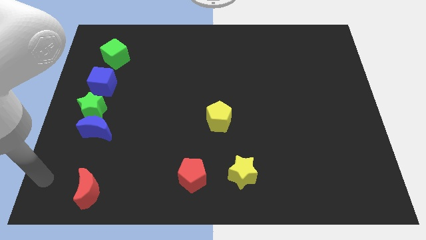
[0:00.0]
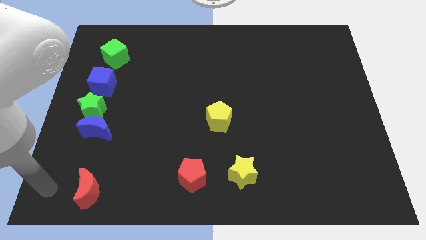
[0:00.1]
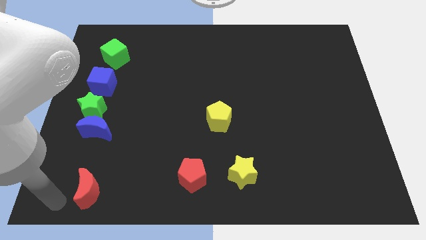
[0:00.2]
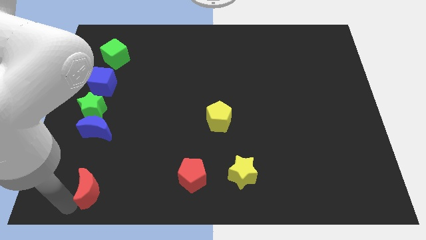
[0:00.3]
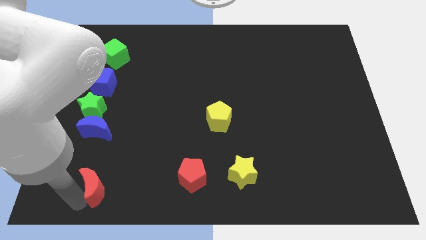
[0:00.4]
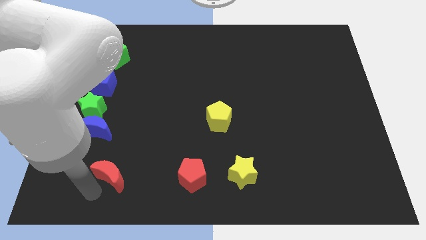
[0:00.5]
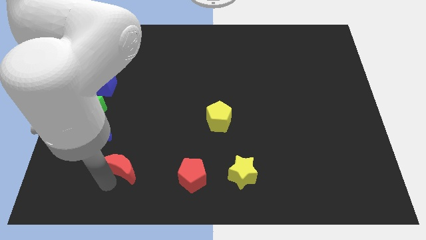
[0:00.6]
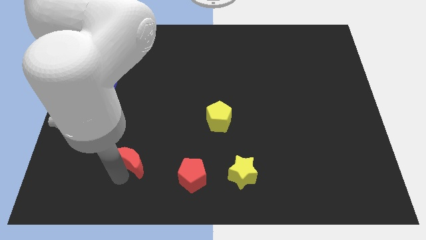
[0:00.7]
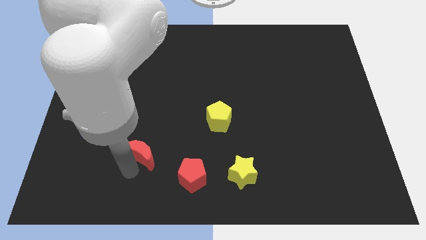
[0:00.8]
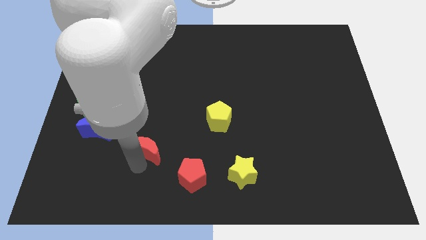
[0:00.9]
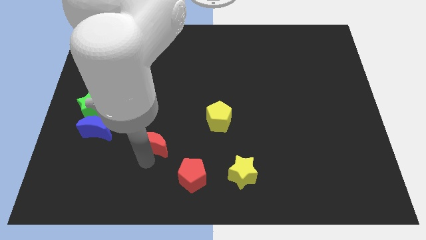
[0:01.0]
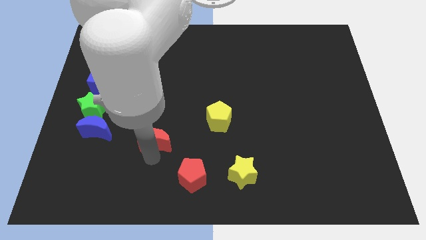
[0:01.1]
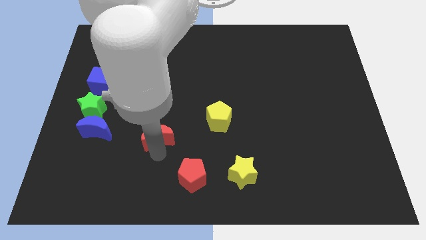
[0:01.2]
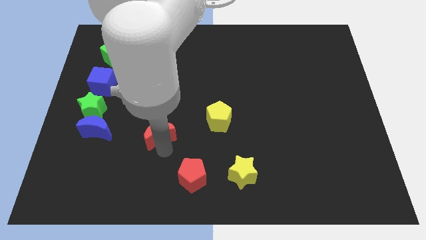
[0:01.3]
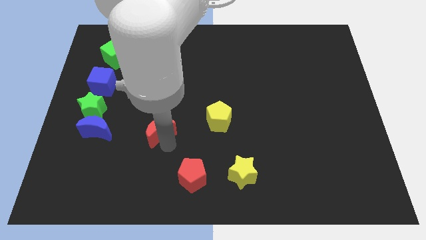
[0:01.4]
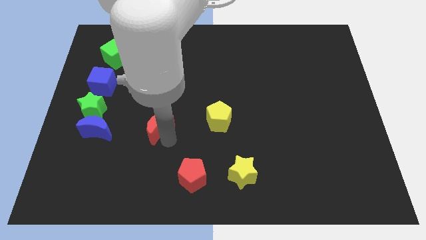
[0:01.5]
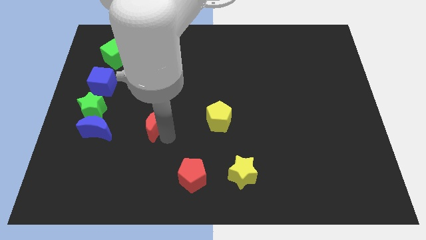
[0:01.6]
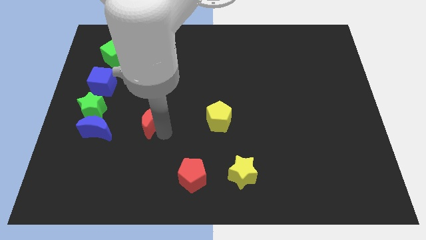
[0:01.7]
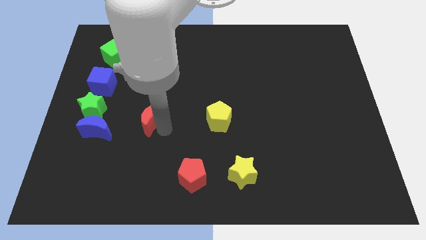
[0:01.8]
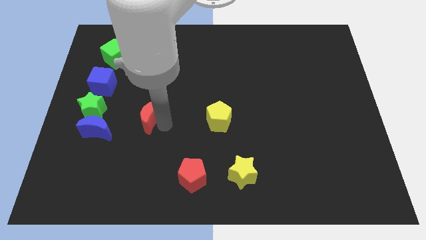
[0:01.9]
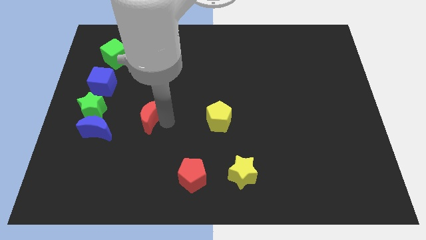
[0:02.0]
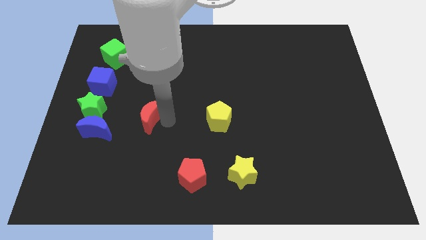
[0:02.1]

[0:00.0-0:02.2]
place the red moon at the left side of the yellow pentagon

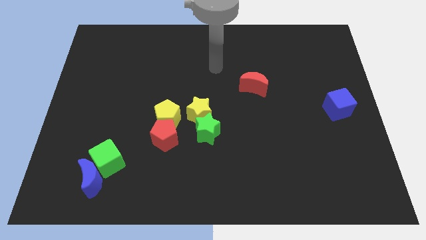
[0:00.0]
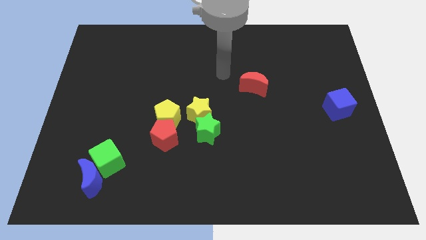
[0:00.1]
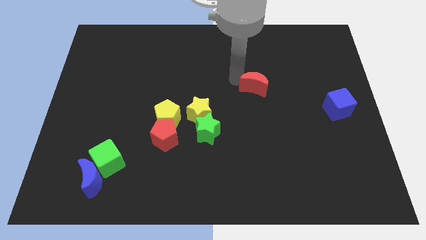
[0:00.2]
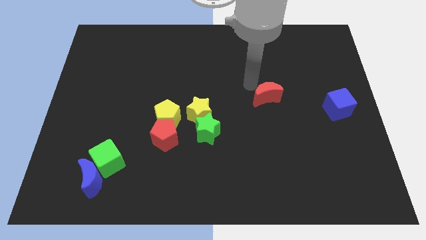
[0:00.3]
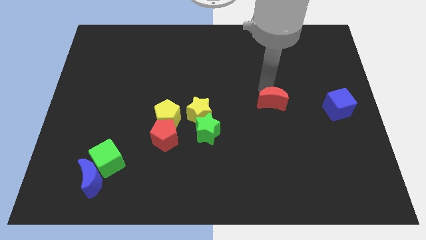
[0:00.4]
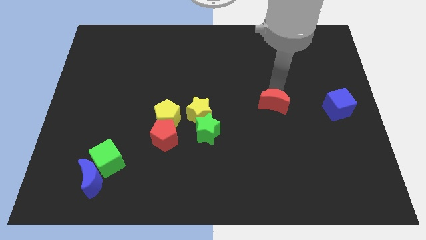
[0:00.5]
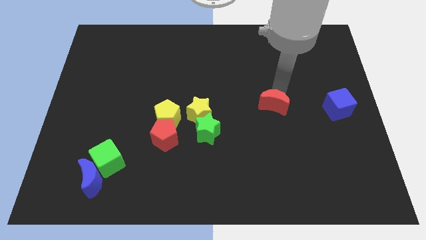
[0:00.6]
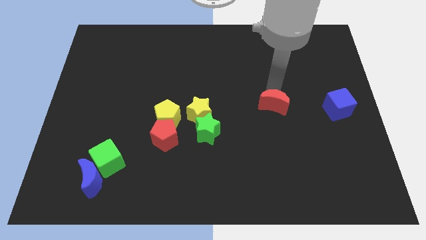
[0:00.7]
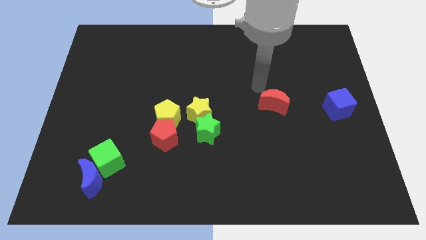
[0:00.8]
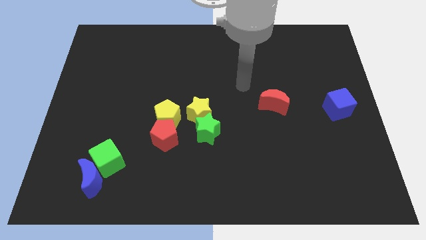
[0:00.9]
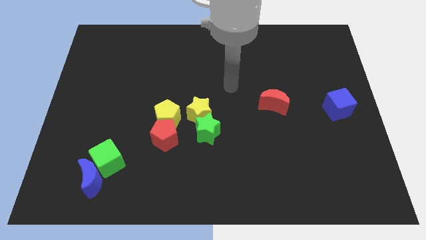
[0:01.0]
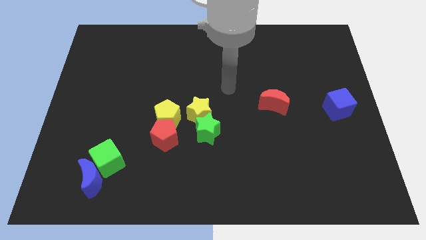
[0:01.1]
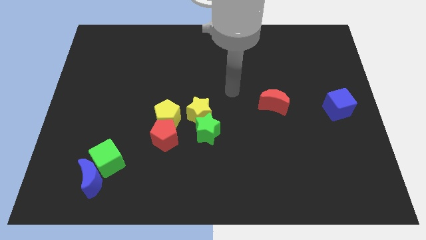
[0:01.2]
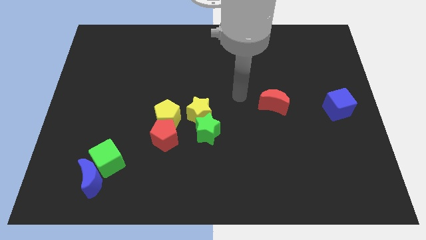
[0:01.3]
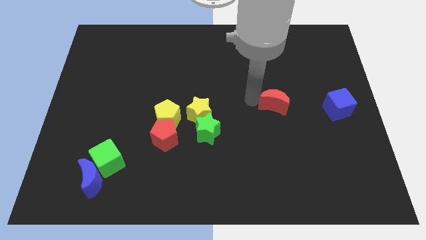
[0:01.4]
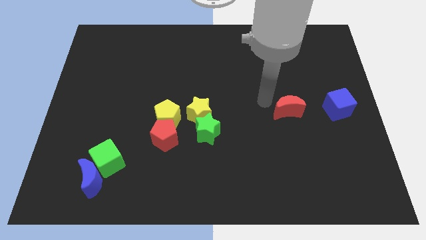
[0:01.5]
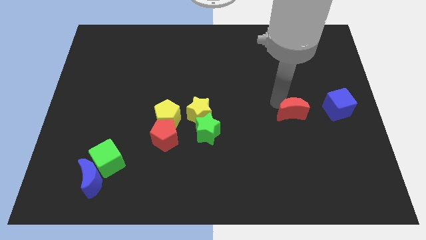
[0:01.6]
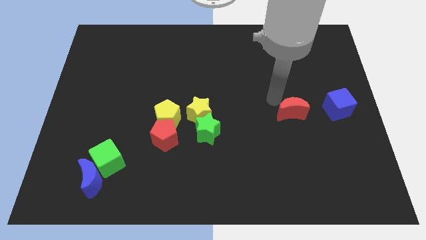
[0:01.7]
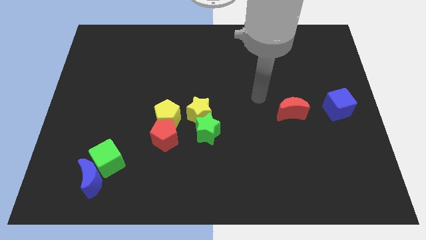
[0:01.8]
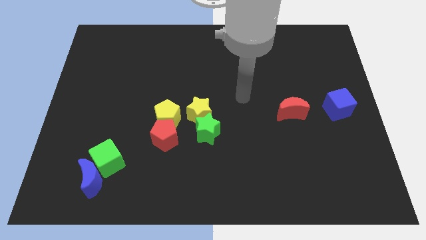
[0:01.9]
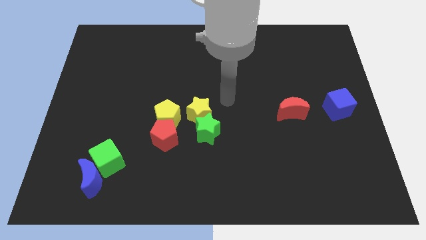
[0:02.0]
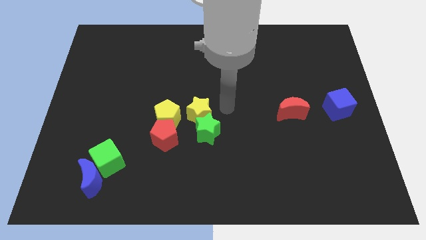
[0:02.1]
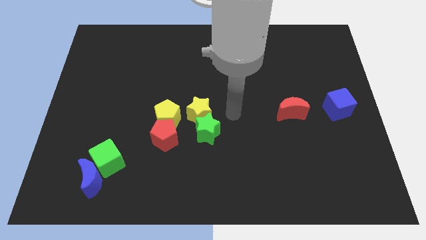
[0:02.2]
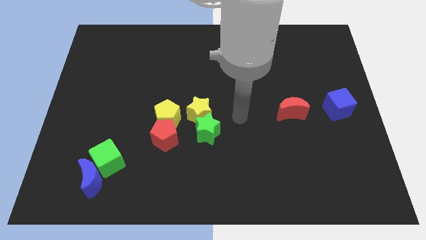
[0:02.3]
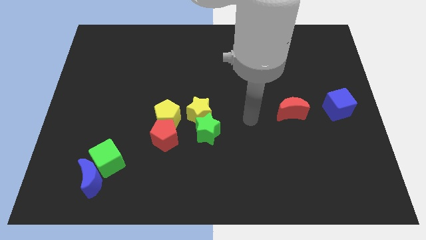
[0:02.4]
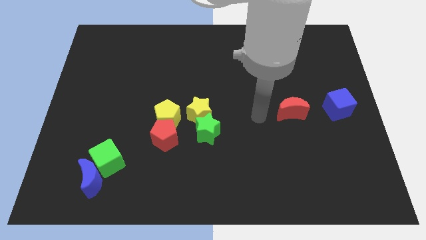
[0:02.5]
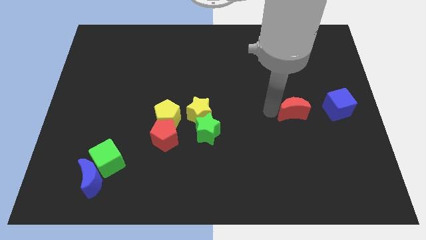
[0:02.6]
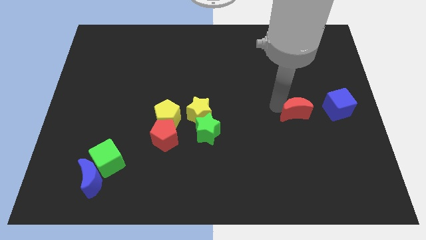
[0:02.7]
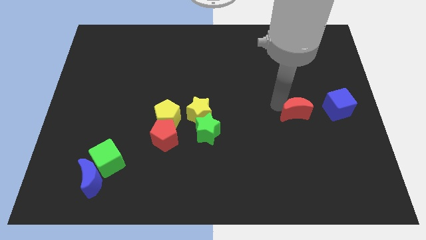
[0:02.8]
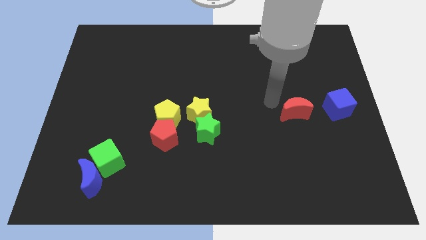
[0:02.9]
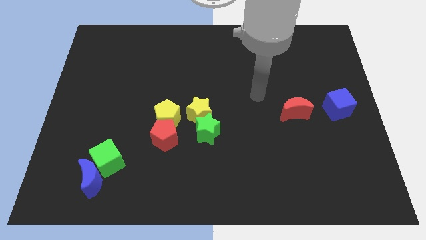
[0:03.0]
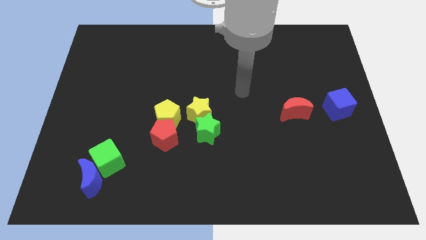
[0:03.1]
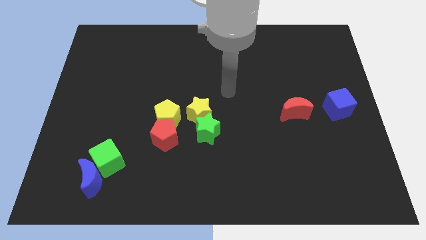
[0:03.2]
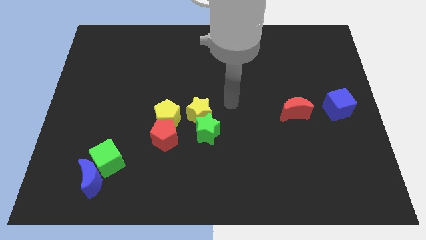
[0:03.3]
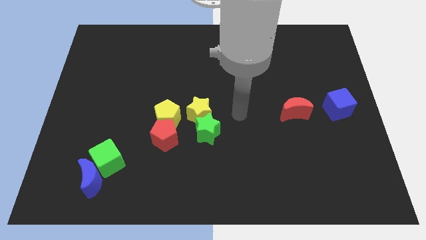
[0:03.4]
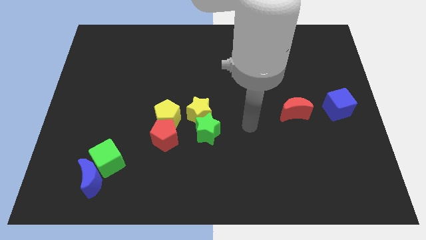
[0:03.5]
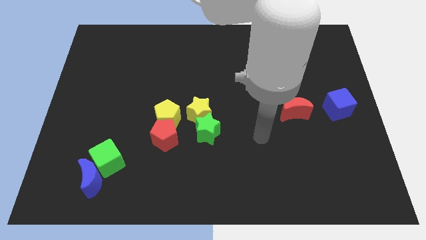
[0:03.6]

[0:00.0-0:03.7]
slide the red moon beside the blue cube

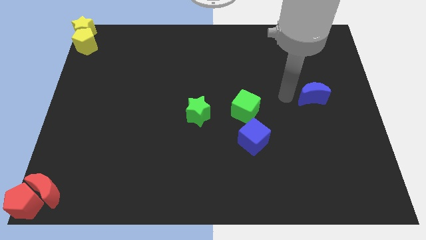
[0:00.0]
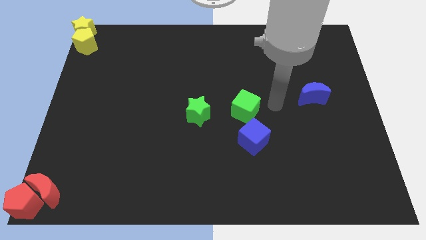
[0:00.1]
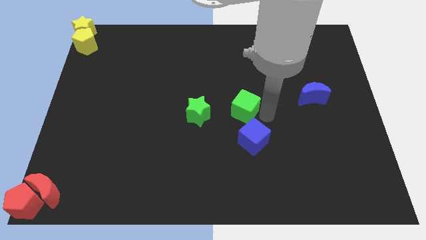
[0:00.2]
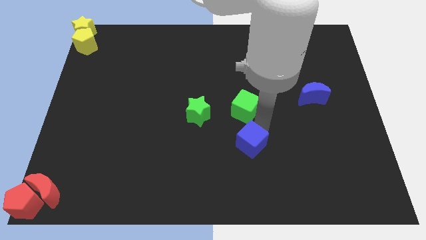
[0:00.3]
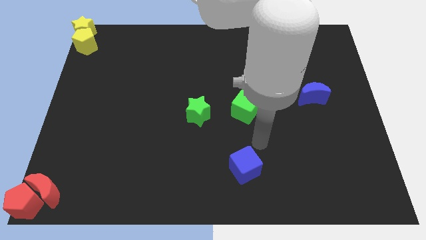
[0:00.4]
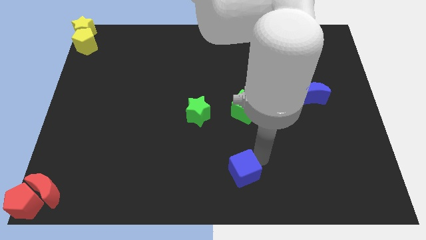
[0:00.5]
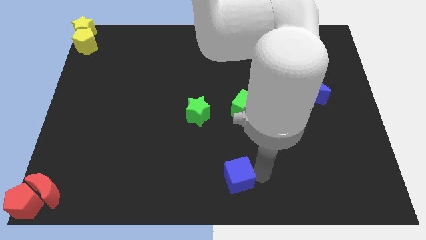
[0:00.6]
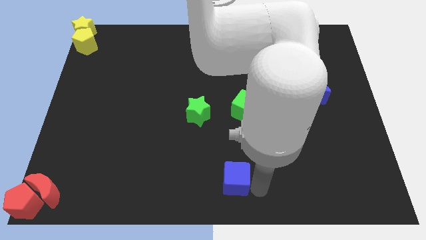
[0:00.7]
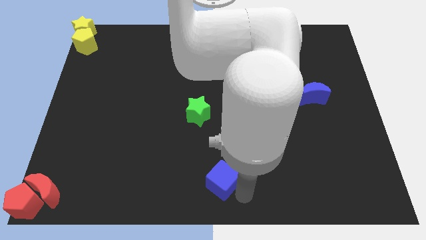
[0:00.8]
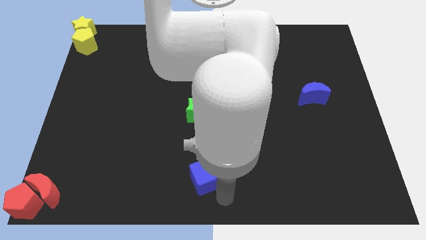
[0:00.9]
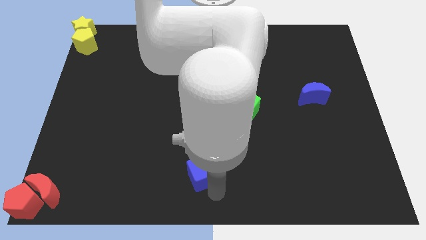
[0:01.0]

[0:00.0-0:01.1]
put the blue cube at the bottom center of the board

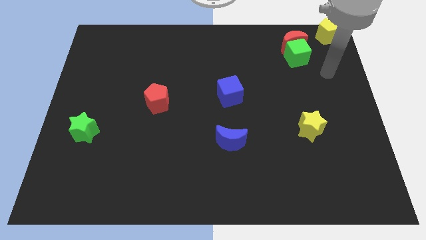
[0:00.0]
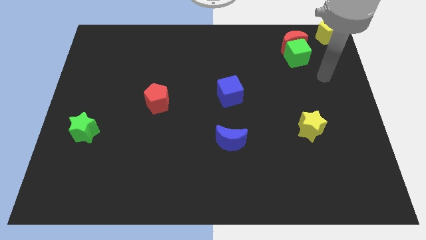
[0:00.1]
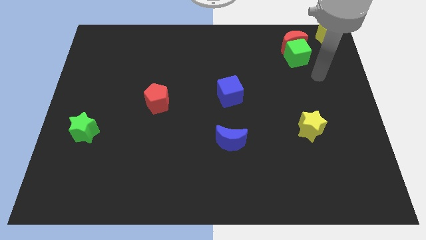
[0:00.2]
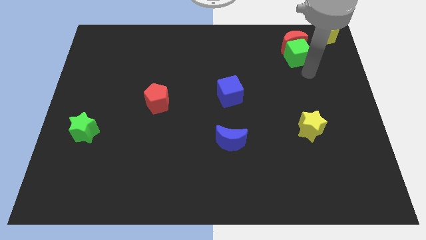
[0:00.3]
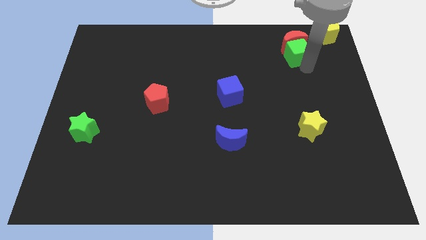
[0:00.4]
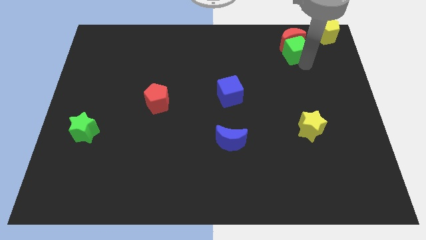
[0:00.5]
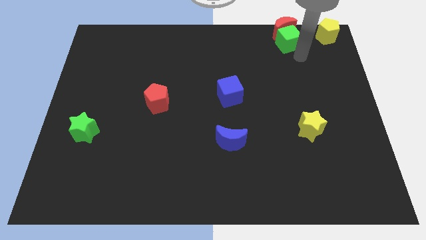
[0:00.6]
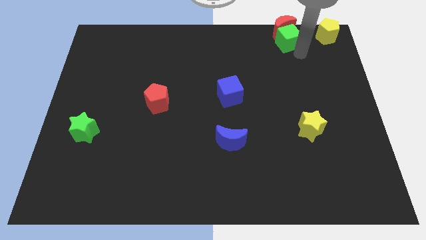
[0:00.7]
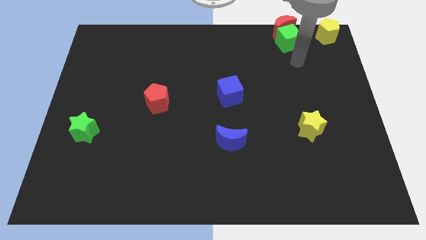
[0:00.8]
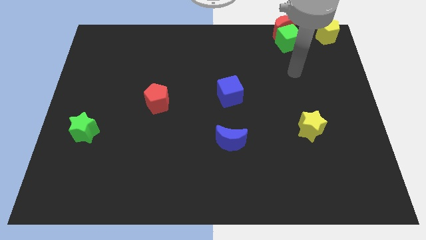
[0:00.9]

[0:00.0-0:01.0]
push the red crescent with green cube towards the top right of the board

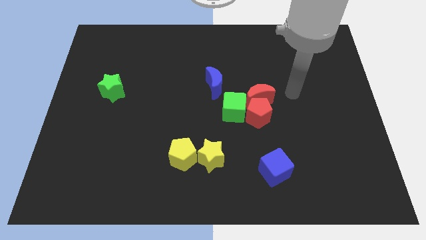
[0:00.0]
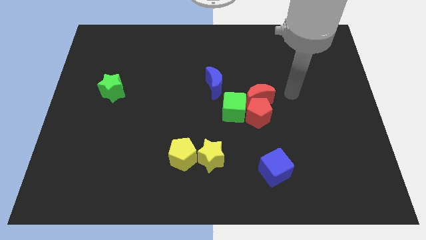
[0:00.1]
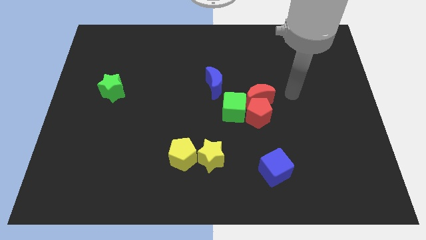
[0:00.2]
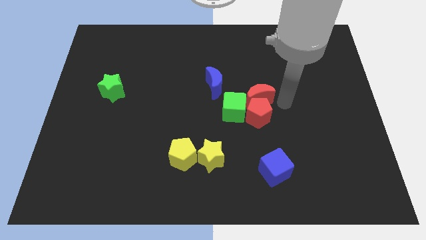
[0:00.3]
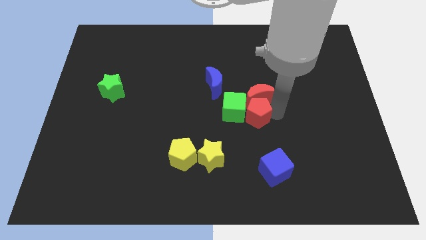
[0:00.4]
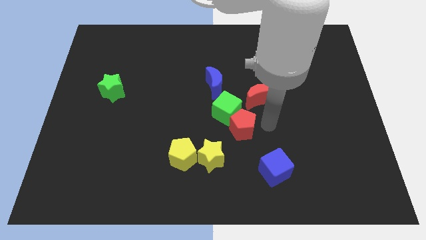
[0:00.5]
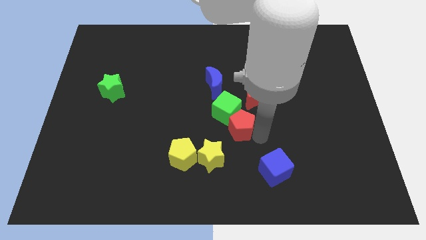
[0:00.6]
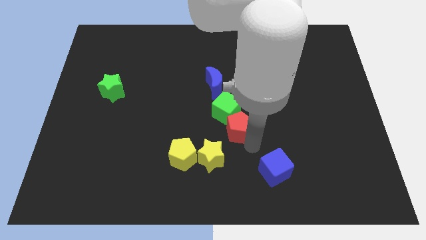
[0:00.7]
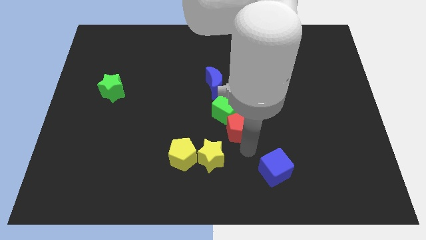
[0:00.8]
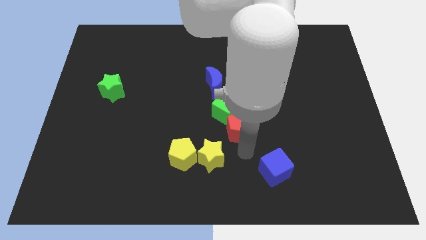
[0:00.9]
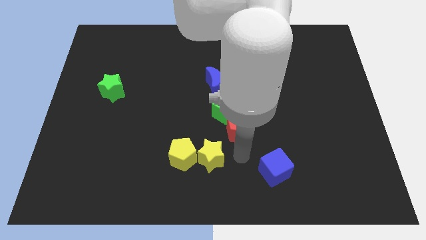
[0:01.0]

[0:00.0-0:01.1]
tap the red pentagon
